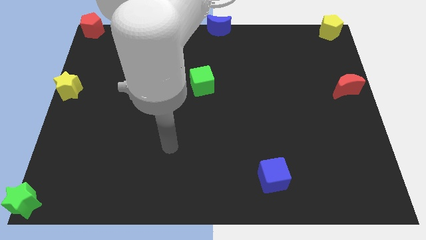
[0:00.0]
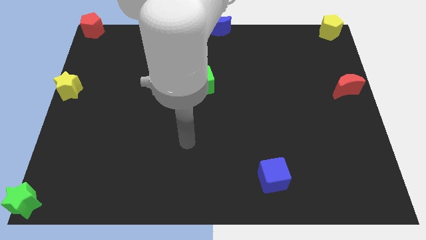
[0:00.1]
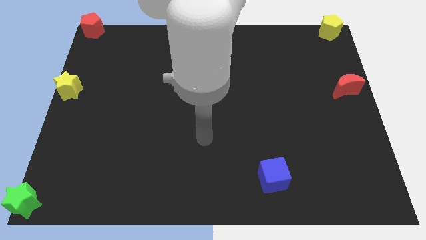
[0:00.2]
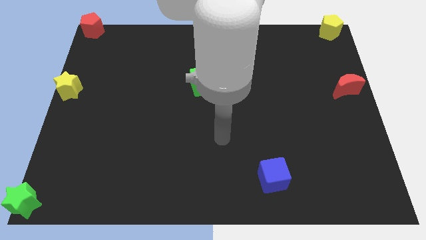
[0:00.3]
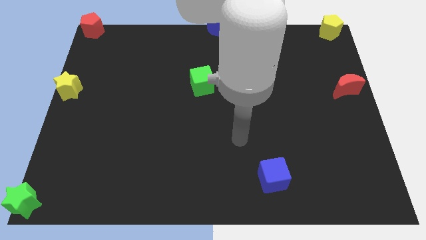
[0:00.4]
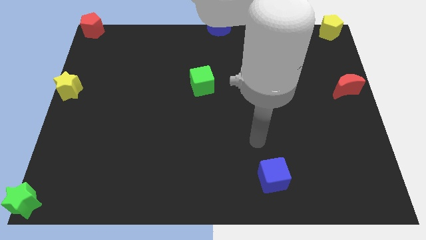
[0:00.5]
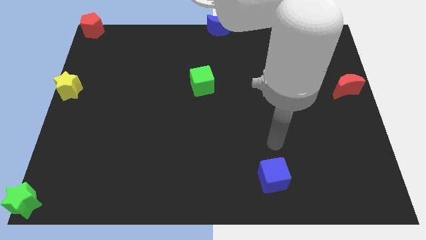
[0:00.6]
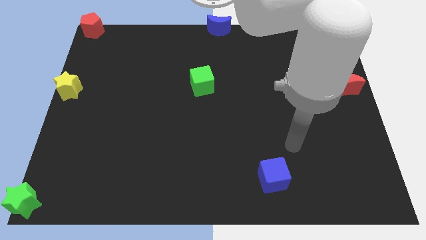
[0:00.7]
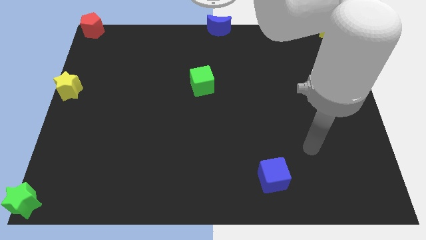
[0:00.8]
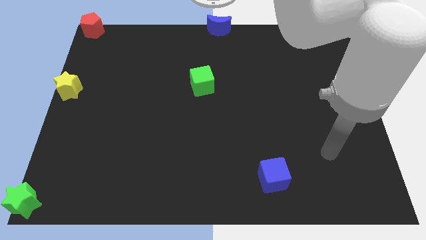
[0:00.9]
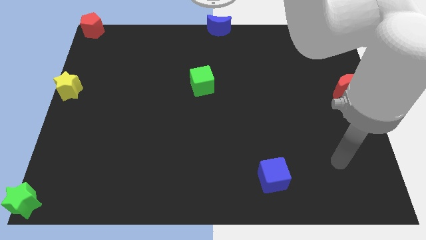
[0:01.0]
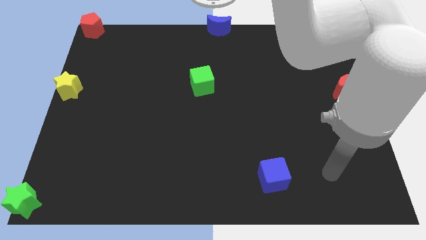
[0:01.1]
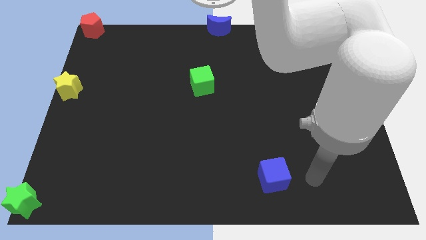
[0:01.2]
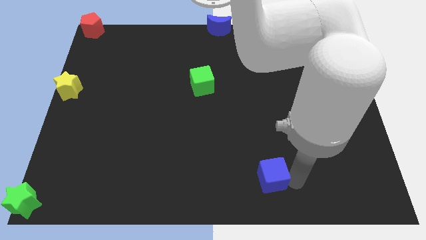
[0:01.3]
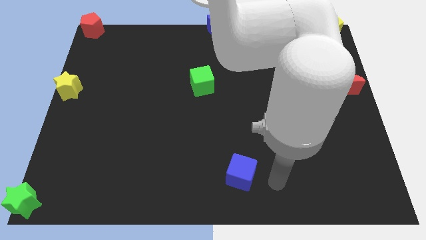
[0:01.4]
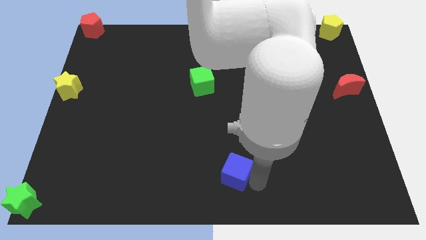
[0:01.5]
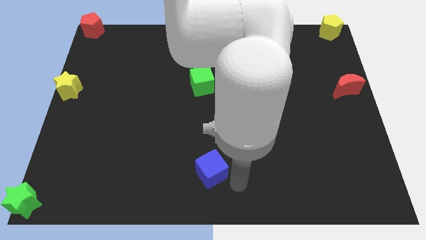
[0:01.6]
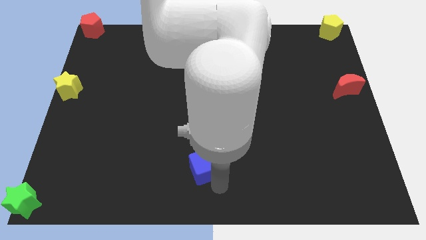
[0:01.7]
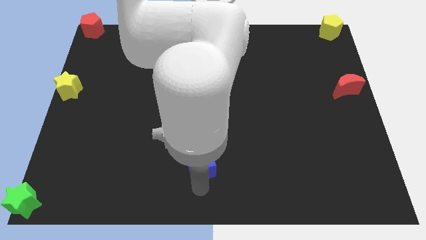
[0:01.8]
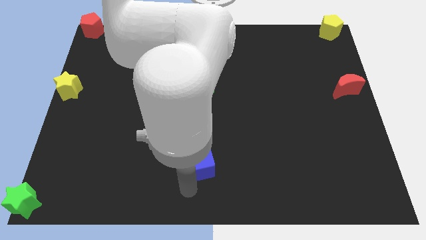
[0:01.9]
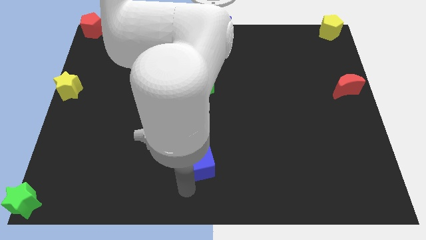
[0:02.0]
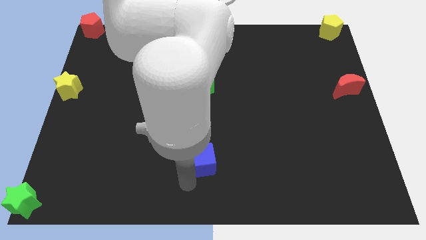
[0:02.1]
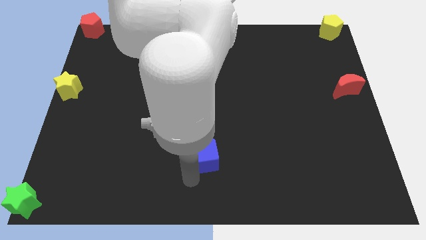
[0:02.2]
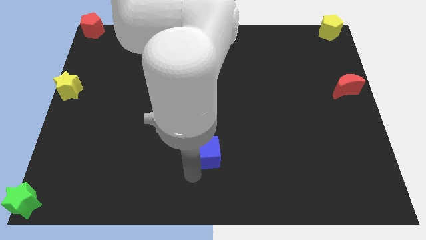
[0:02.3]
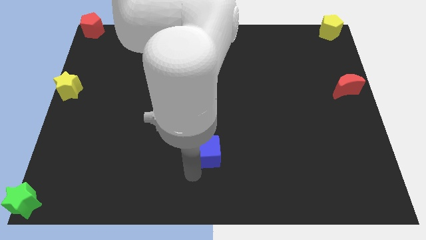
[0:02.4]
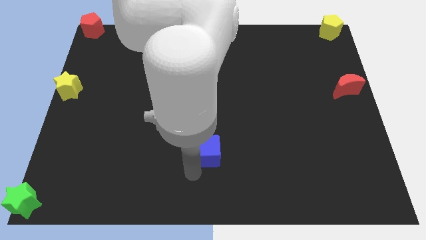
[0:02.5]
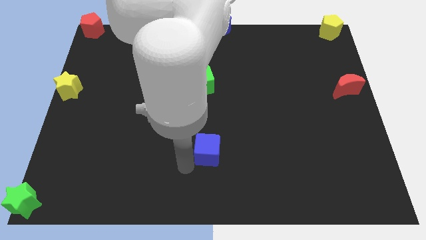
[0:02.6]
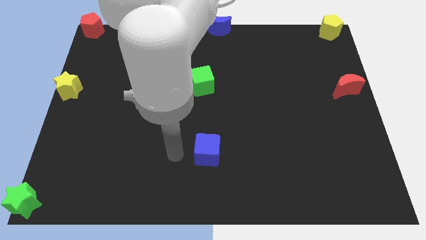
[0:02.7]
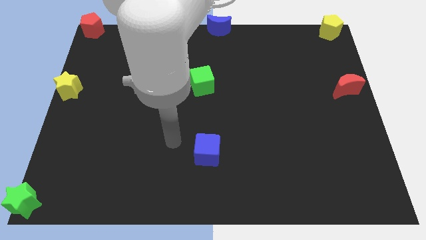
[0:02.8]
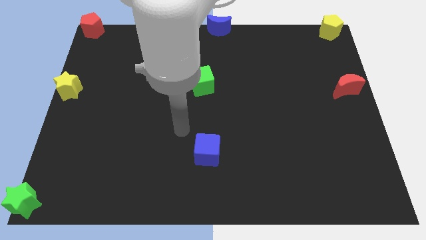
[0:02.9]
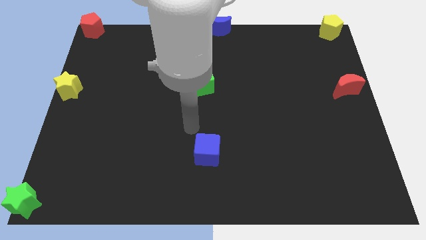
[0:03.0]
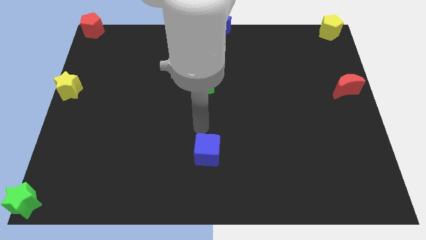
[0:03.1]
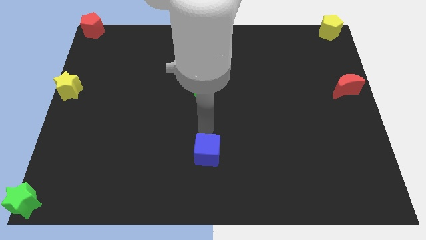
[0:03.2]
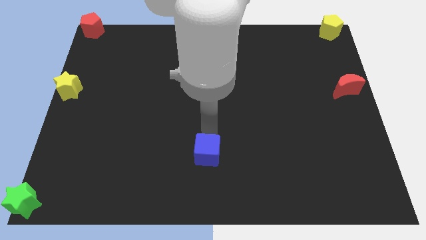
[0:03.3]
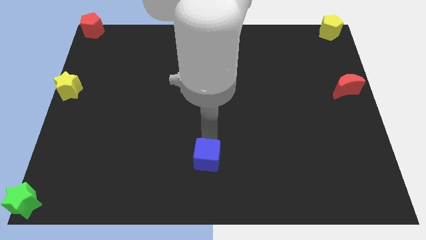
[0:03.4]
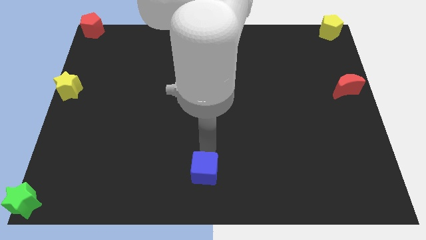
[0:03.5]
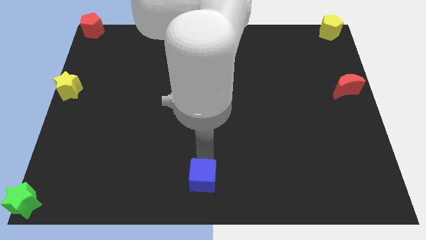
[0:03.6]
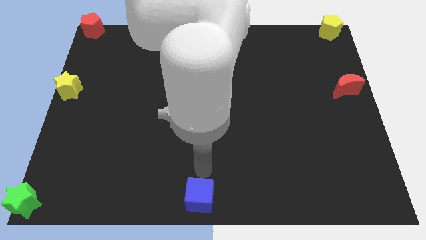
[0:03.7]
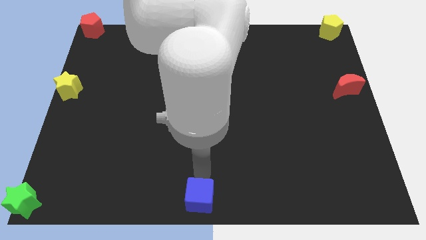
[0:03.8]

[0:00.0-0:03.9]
move blue cube to the bottom center of the board

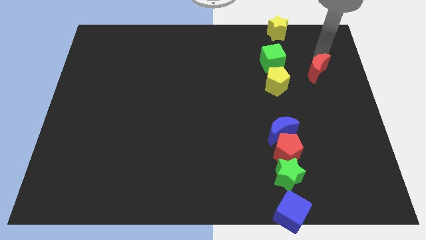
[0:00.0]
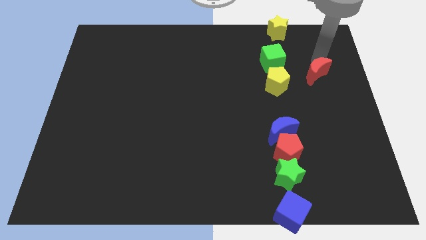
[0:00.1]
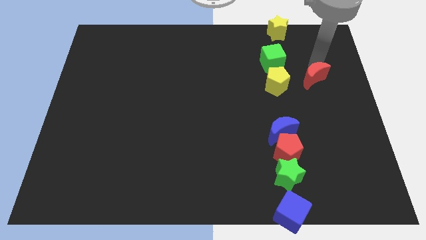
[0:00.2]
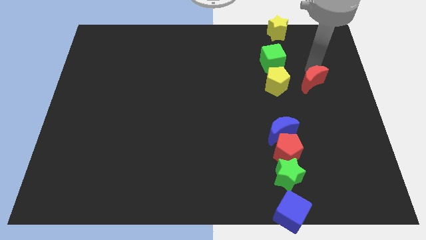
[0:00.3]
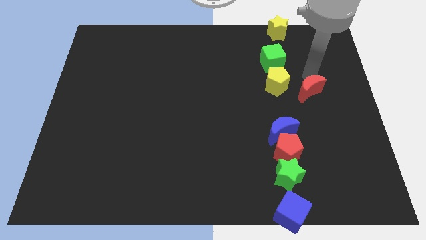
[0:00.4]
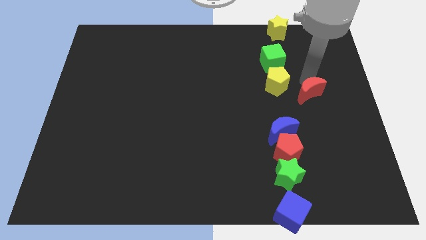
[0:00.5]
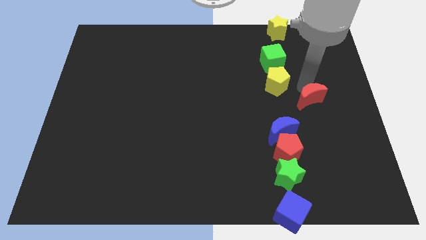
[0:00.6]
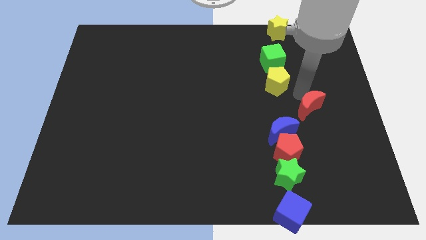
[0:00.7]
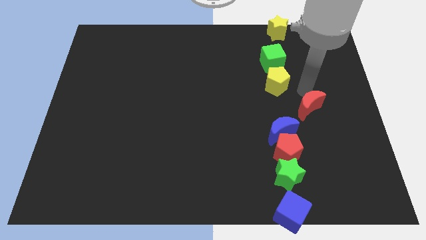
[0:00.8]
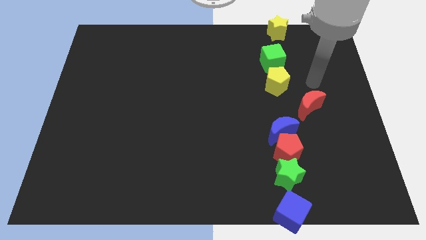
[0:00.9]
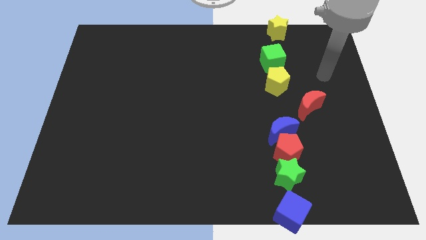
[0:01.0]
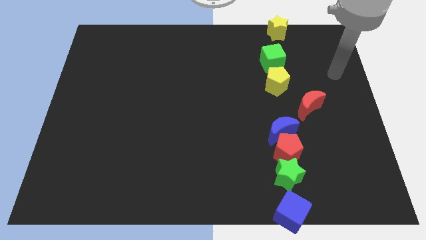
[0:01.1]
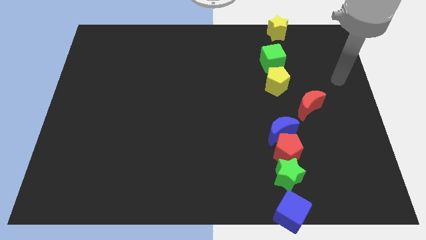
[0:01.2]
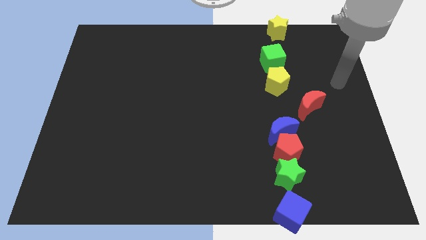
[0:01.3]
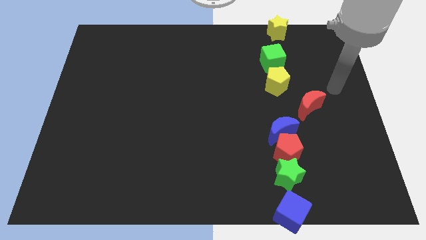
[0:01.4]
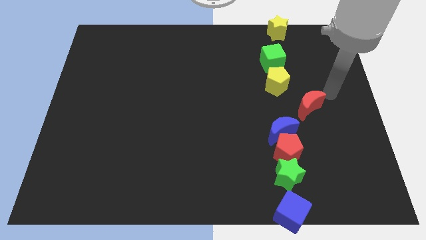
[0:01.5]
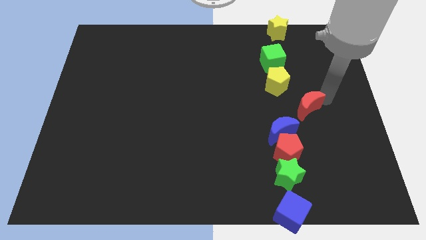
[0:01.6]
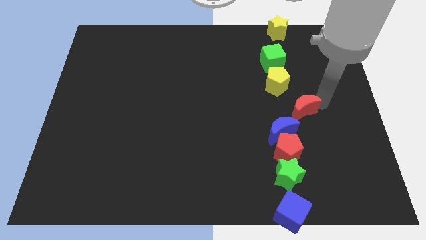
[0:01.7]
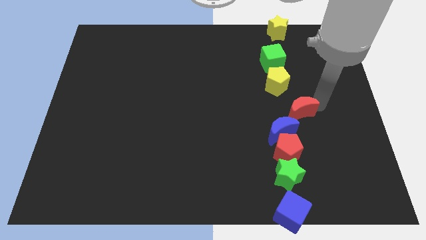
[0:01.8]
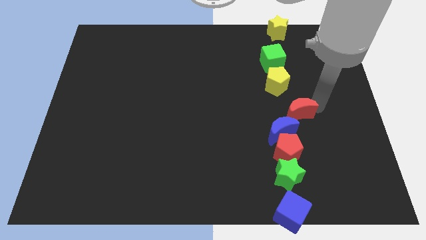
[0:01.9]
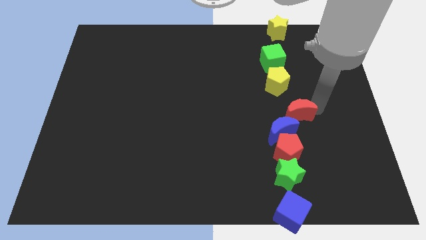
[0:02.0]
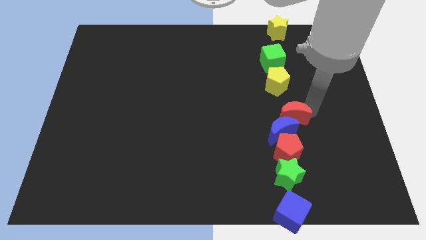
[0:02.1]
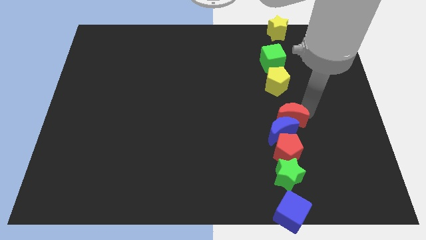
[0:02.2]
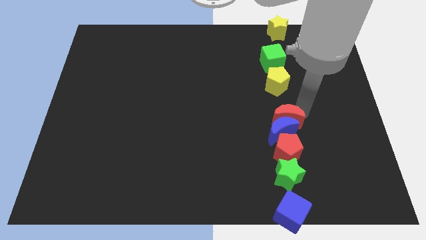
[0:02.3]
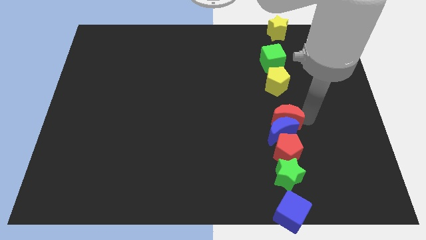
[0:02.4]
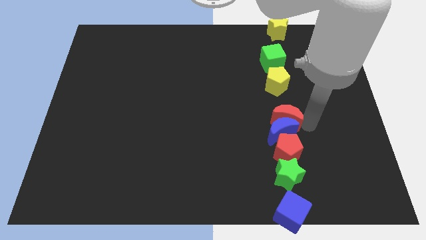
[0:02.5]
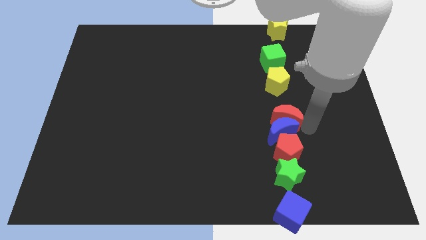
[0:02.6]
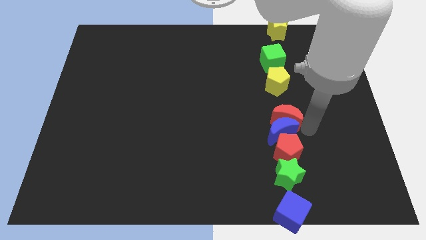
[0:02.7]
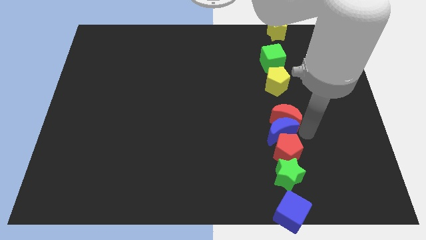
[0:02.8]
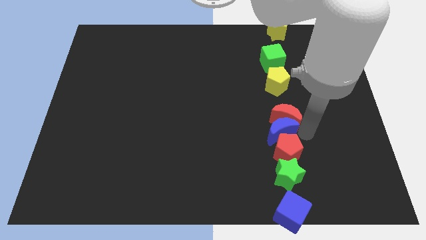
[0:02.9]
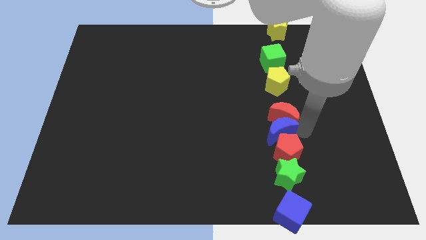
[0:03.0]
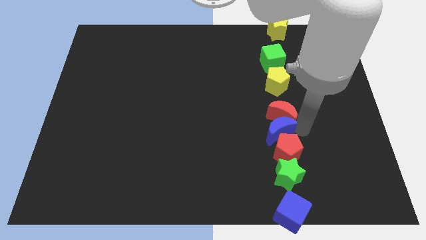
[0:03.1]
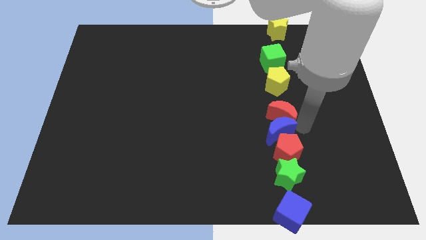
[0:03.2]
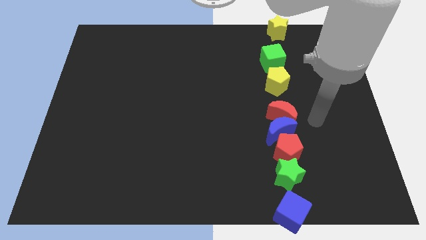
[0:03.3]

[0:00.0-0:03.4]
put the red moon at the top of the blue crescent

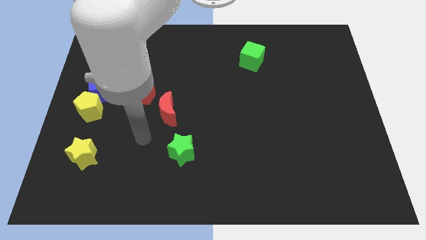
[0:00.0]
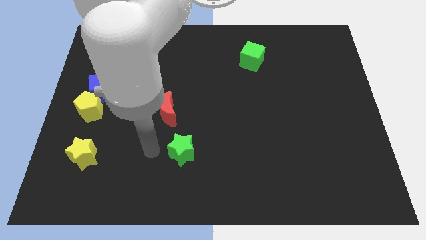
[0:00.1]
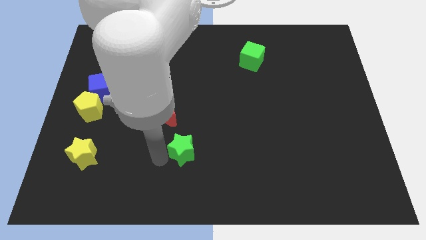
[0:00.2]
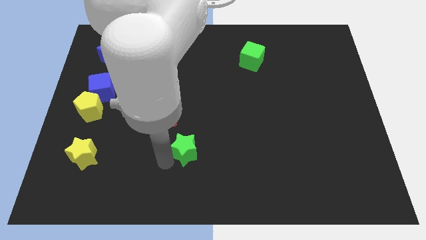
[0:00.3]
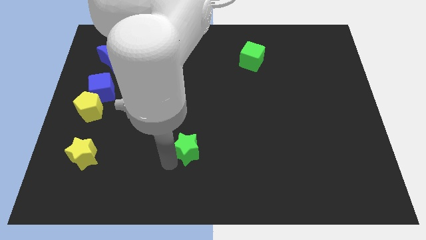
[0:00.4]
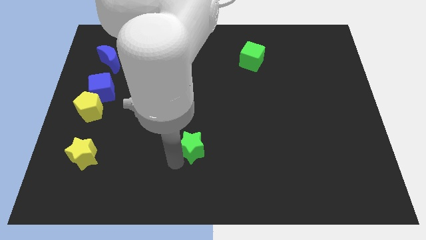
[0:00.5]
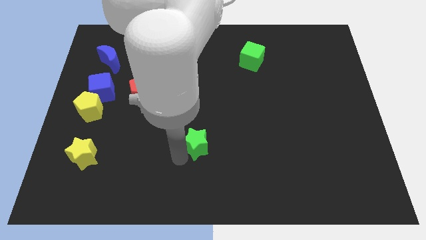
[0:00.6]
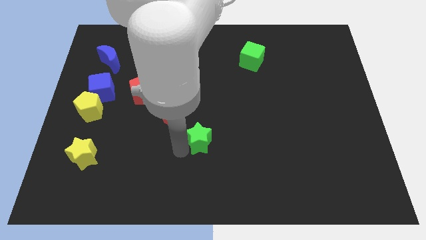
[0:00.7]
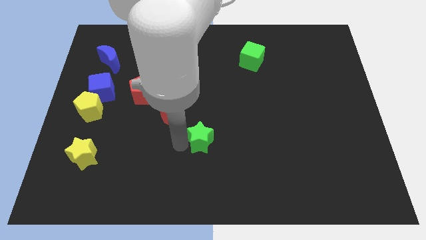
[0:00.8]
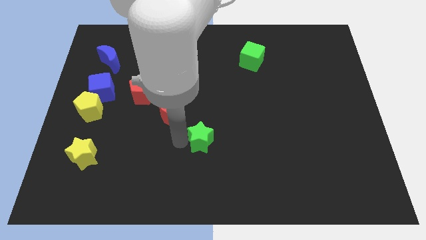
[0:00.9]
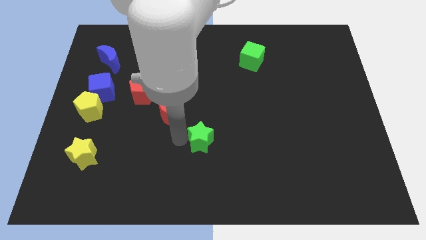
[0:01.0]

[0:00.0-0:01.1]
push the green star slightly to the top

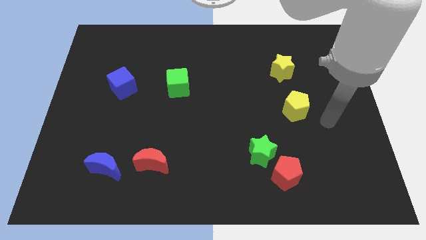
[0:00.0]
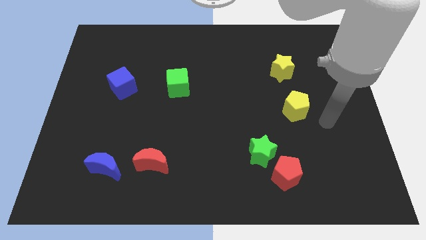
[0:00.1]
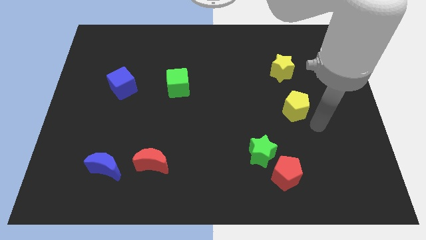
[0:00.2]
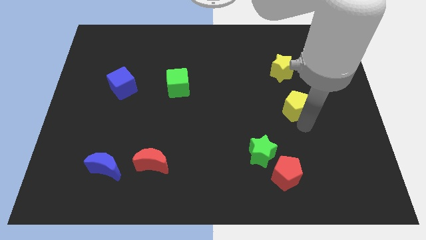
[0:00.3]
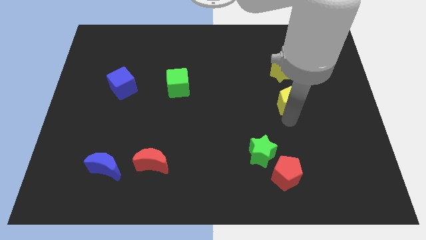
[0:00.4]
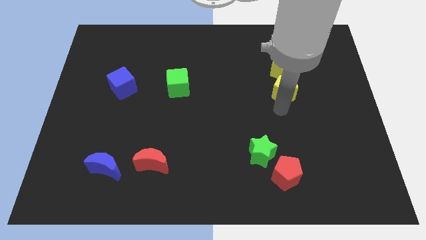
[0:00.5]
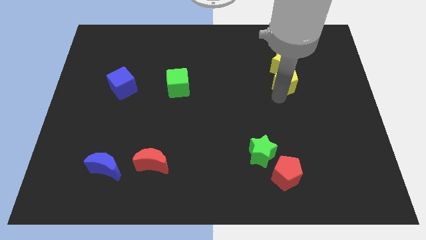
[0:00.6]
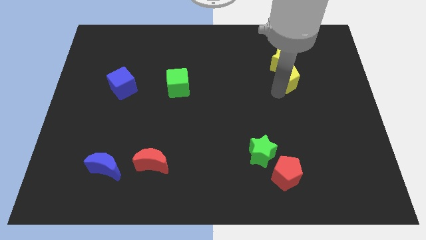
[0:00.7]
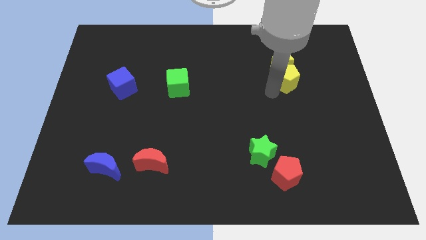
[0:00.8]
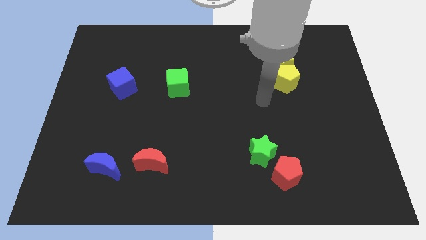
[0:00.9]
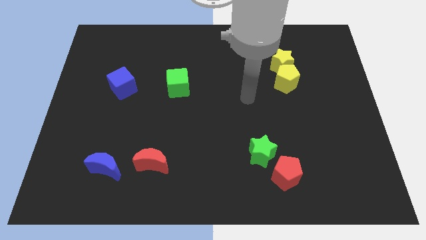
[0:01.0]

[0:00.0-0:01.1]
slide yellow pentagon into yellow star
